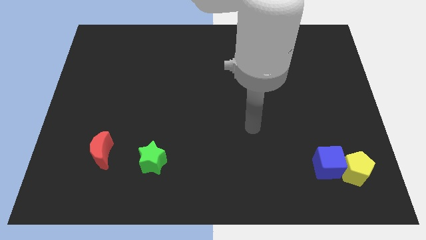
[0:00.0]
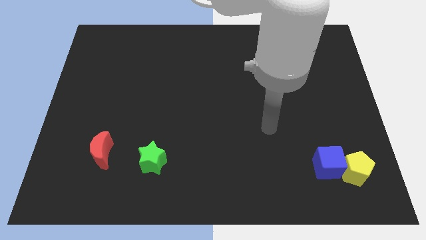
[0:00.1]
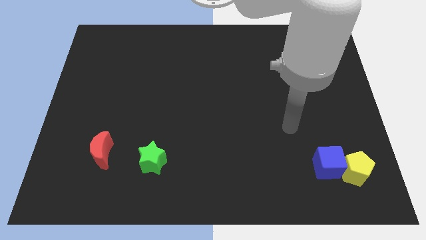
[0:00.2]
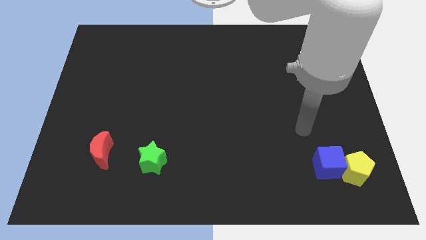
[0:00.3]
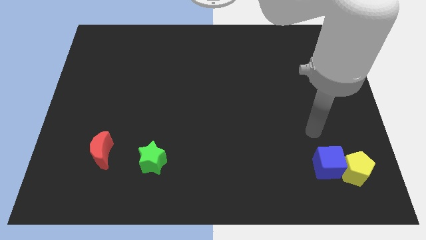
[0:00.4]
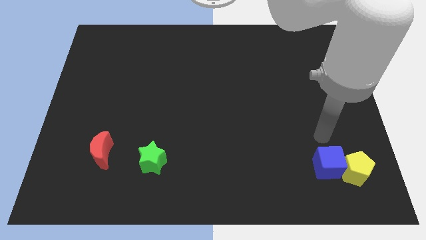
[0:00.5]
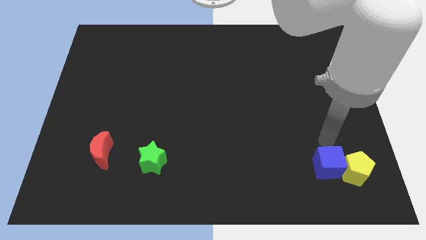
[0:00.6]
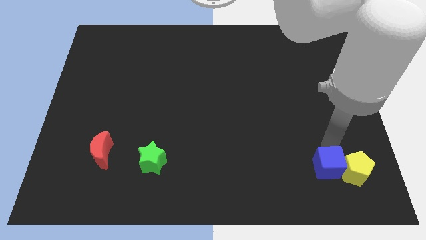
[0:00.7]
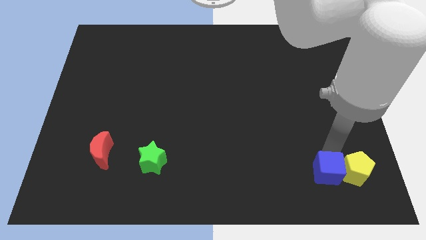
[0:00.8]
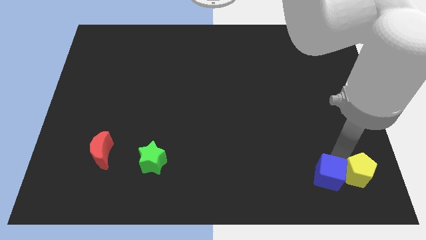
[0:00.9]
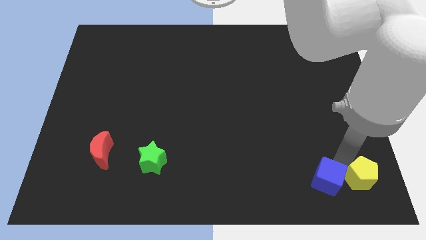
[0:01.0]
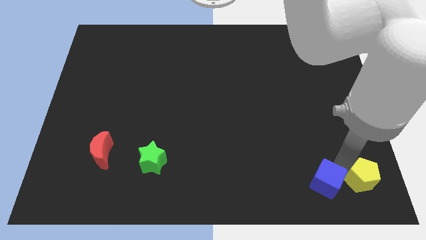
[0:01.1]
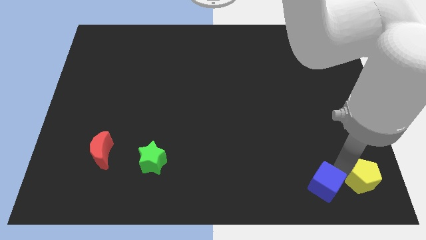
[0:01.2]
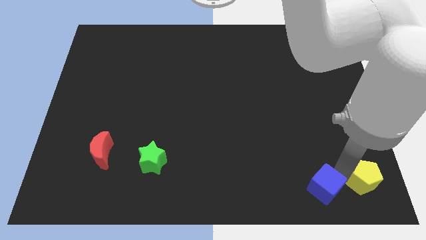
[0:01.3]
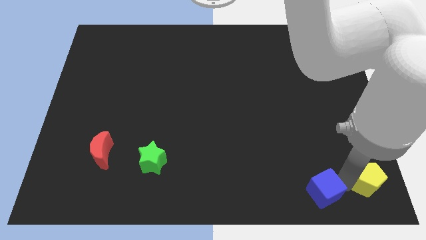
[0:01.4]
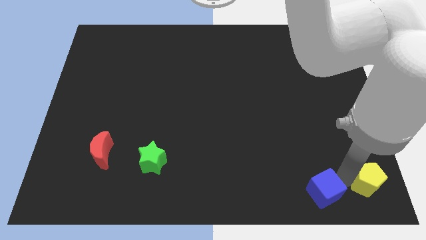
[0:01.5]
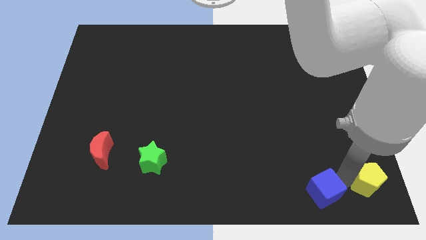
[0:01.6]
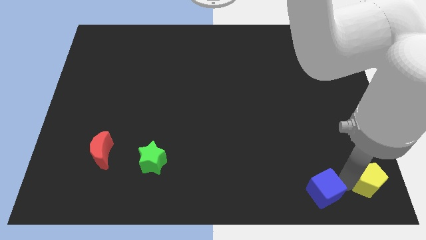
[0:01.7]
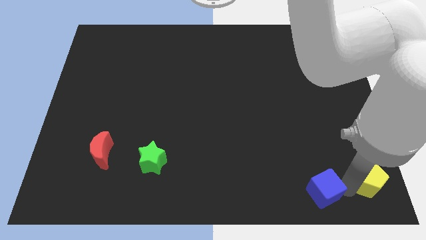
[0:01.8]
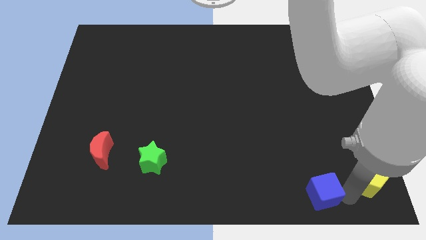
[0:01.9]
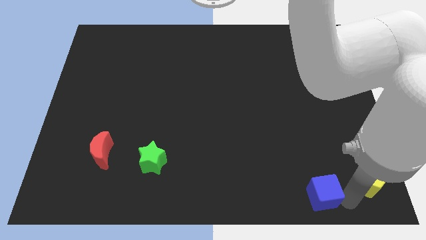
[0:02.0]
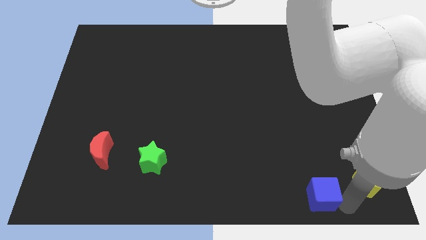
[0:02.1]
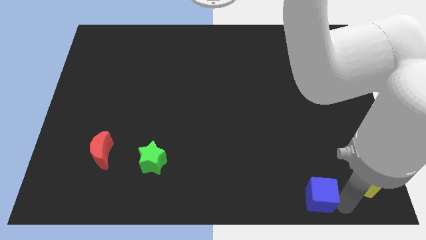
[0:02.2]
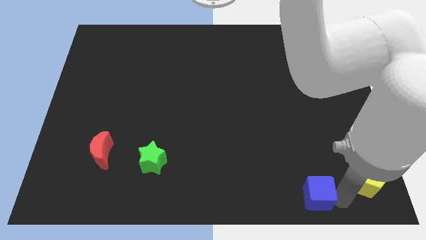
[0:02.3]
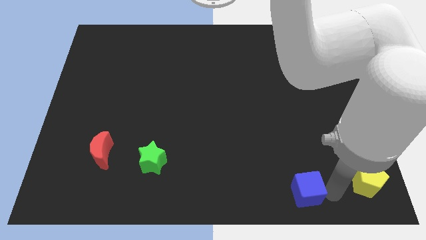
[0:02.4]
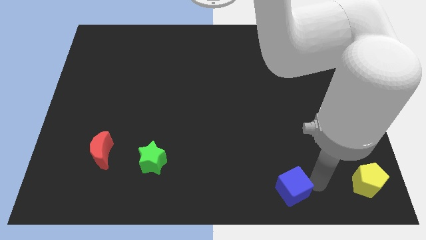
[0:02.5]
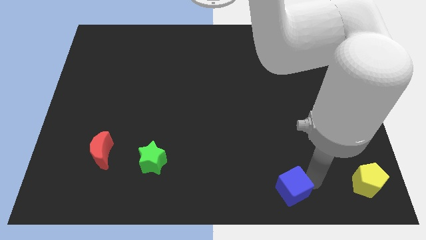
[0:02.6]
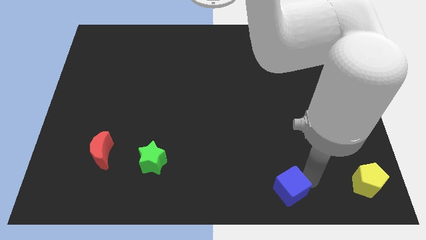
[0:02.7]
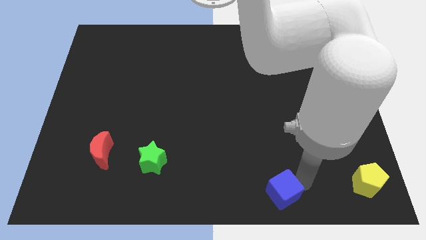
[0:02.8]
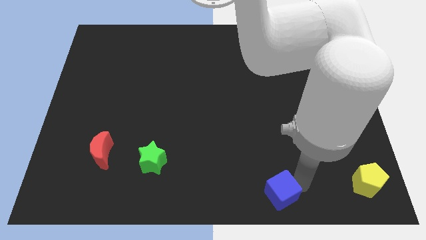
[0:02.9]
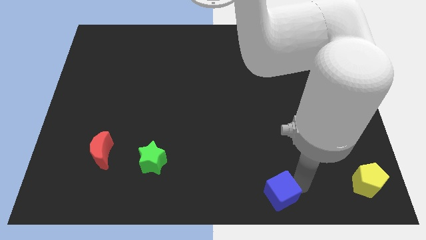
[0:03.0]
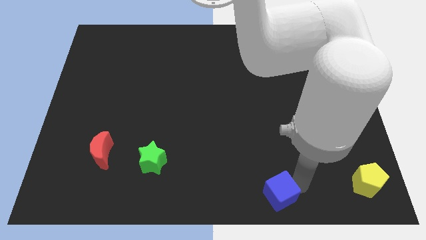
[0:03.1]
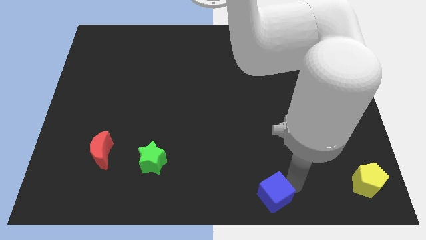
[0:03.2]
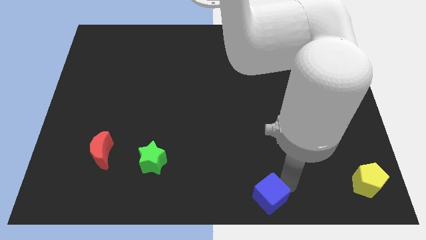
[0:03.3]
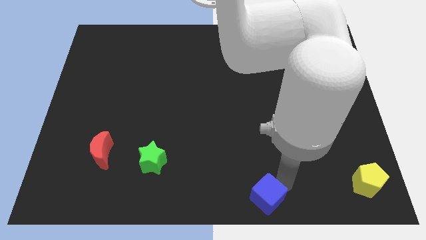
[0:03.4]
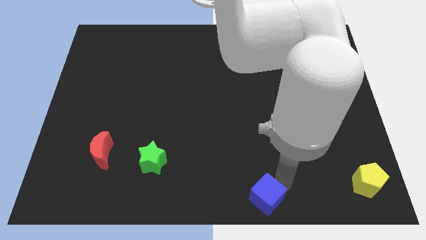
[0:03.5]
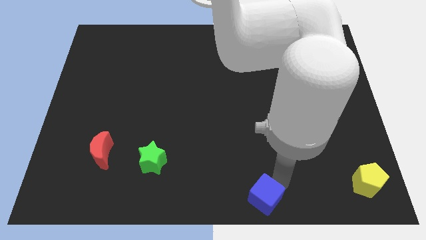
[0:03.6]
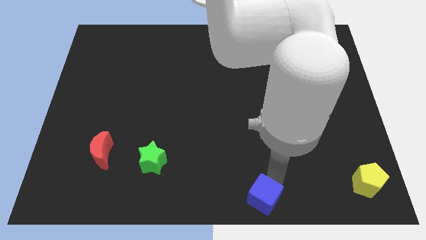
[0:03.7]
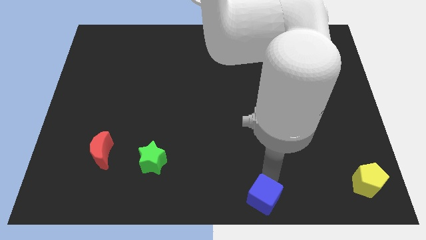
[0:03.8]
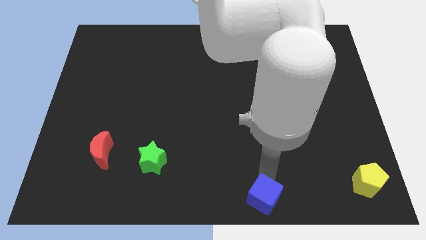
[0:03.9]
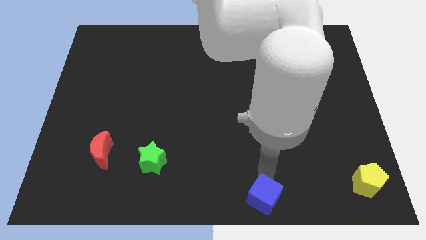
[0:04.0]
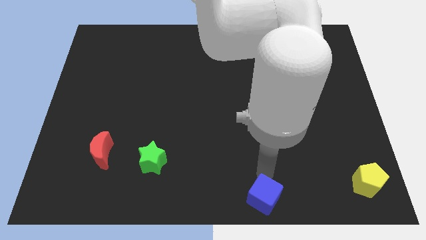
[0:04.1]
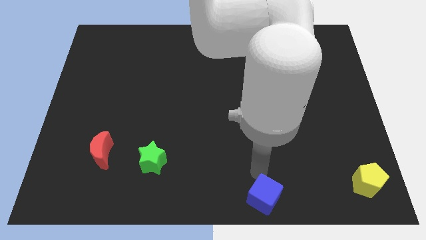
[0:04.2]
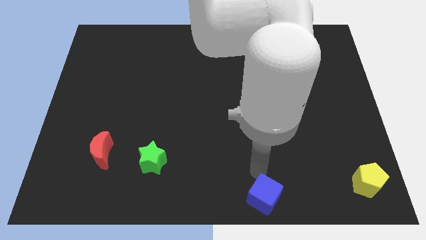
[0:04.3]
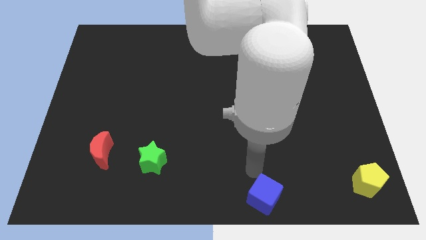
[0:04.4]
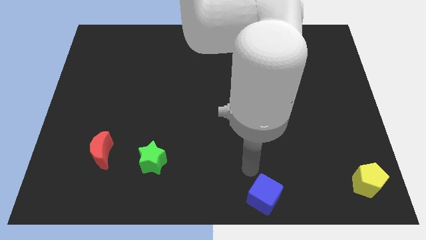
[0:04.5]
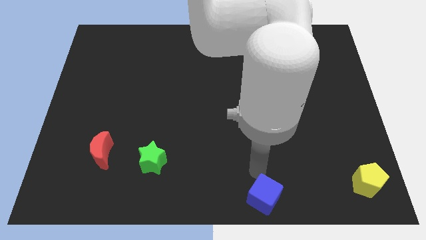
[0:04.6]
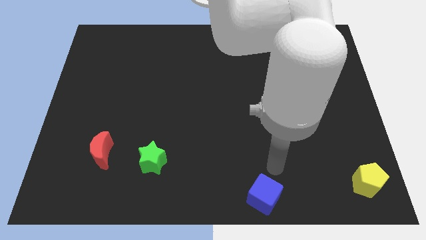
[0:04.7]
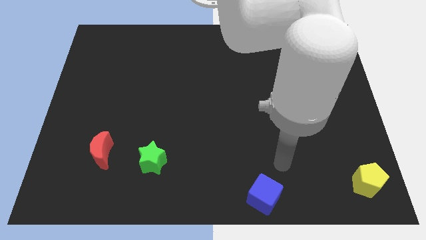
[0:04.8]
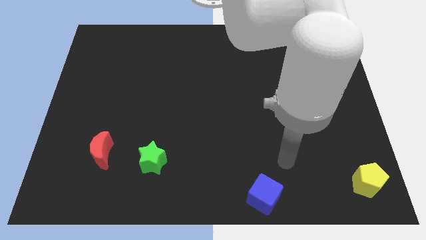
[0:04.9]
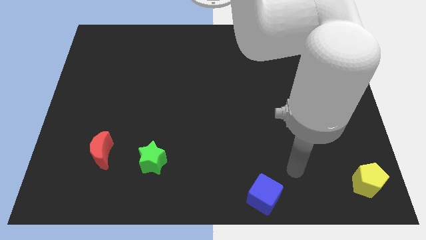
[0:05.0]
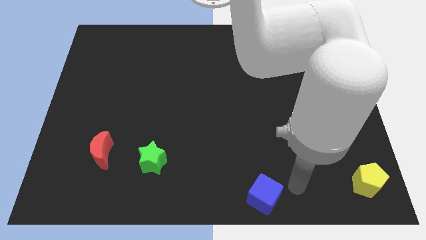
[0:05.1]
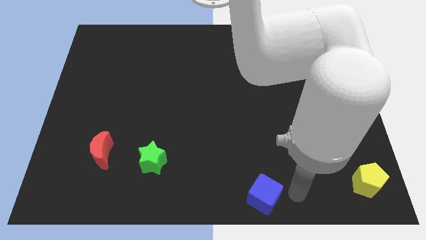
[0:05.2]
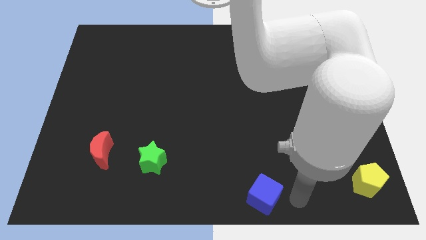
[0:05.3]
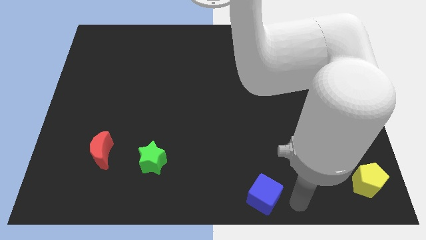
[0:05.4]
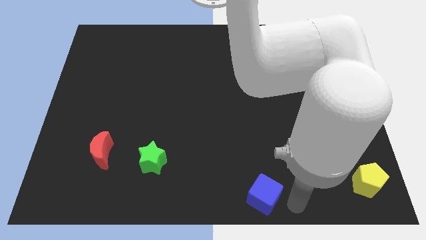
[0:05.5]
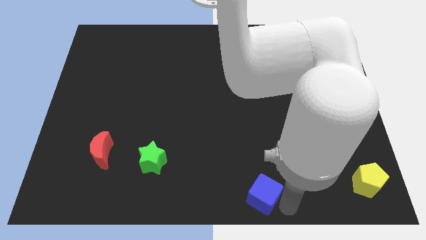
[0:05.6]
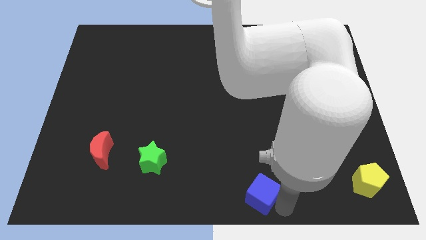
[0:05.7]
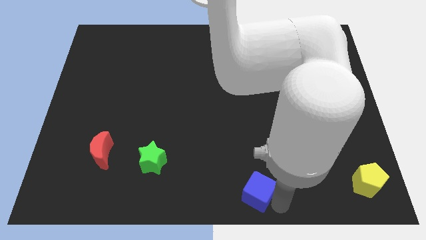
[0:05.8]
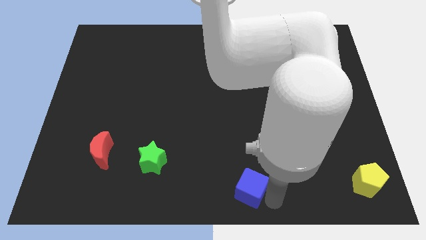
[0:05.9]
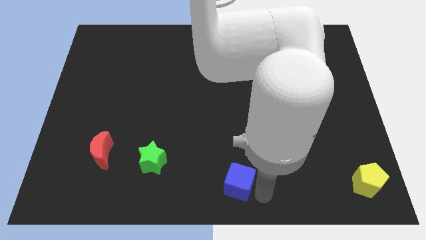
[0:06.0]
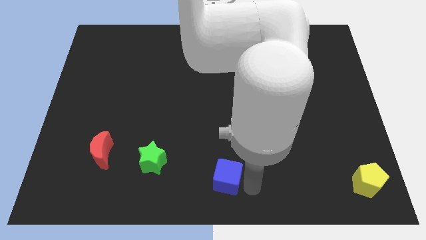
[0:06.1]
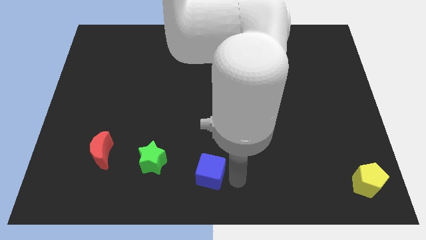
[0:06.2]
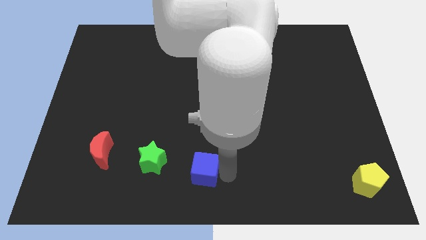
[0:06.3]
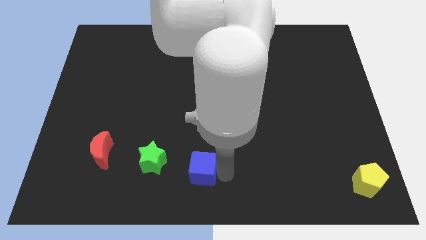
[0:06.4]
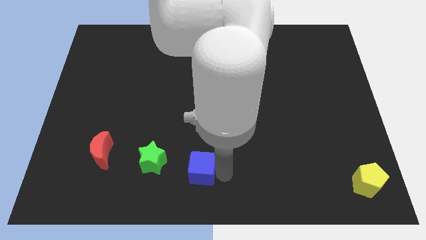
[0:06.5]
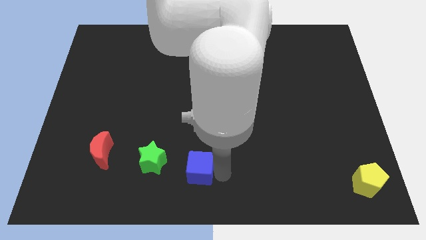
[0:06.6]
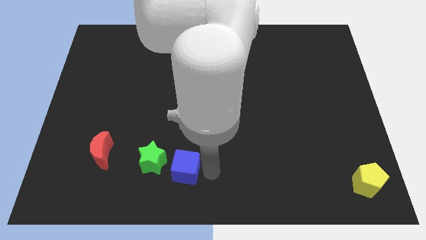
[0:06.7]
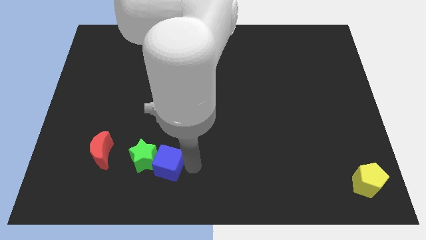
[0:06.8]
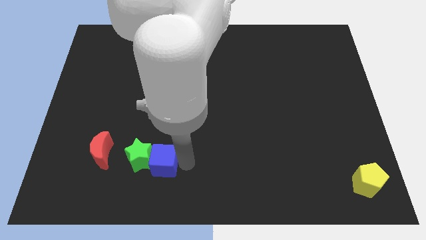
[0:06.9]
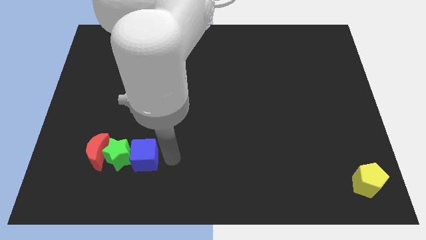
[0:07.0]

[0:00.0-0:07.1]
slide the blue cube towards the star

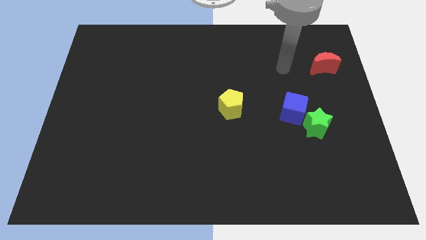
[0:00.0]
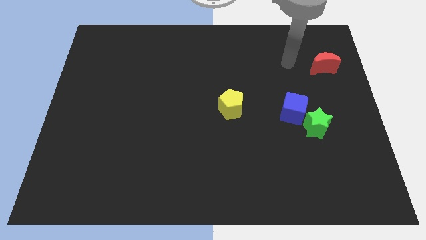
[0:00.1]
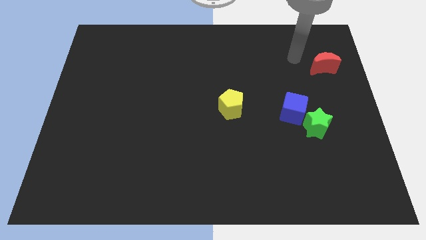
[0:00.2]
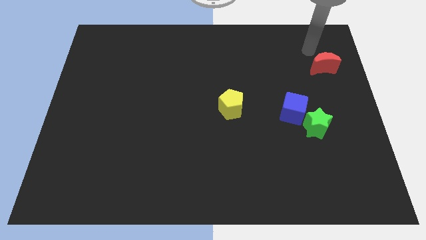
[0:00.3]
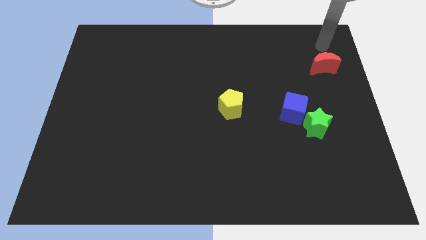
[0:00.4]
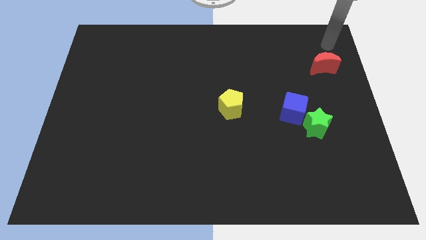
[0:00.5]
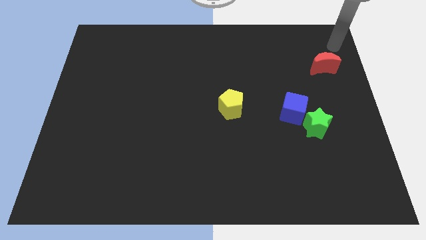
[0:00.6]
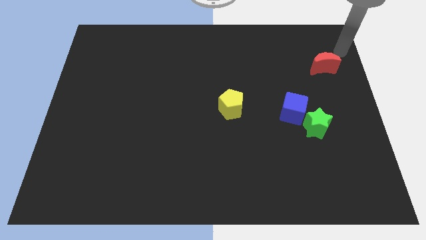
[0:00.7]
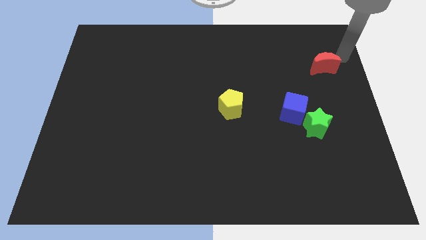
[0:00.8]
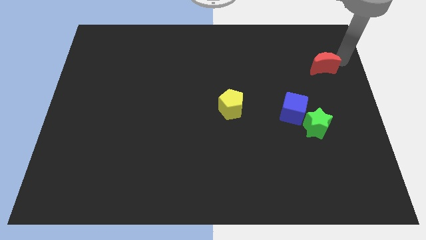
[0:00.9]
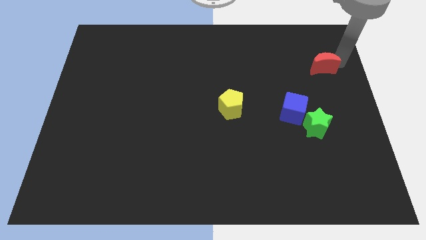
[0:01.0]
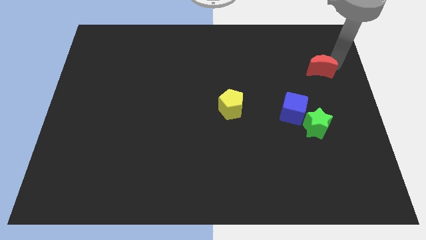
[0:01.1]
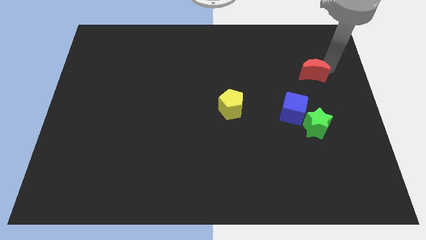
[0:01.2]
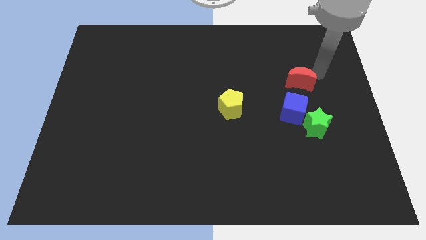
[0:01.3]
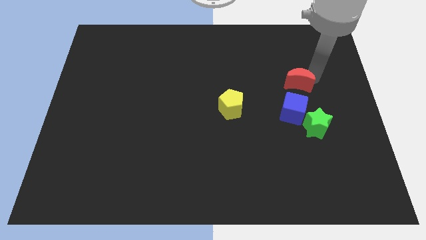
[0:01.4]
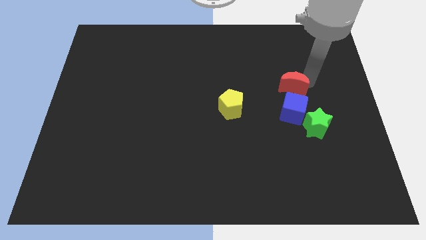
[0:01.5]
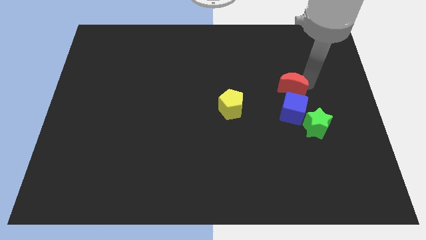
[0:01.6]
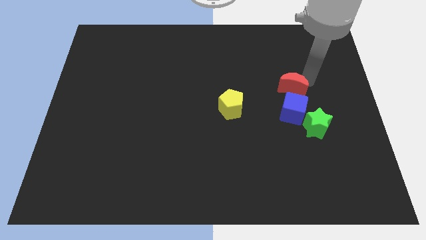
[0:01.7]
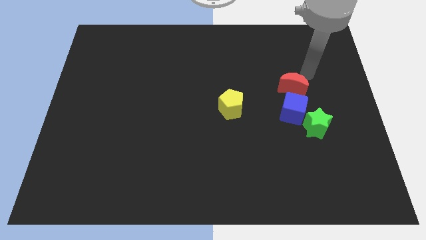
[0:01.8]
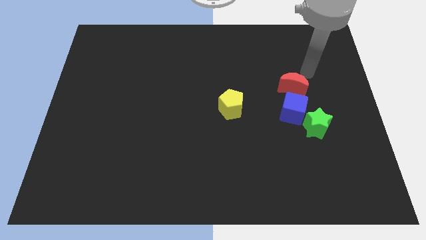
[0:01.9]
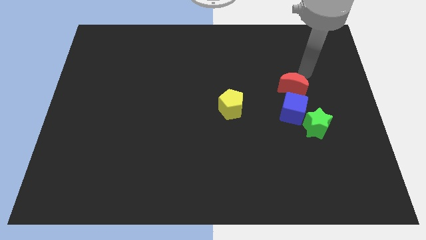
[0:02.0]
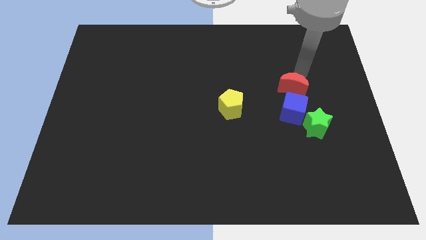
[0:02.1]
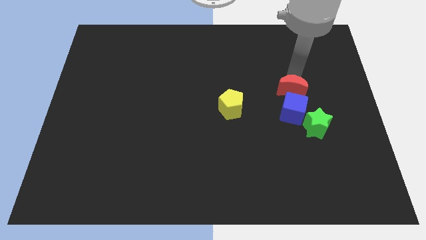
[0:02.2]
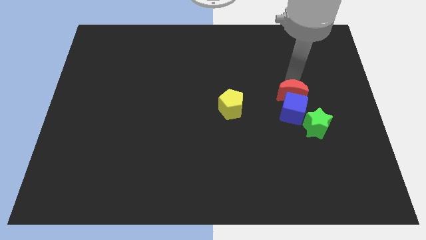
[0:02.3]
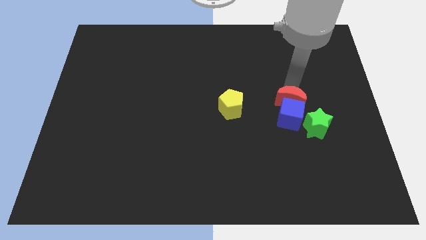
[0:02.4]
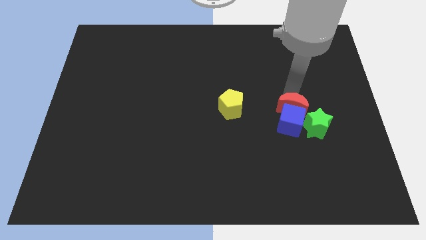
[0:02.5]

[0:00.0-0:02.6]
move the red block close to the blue block
